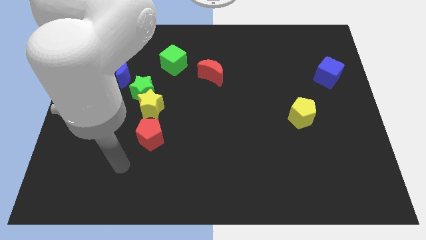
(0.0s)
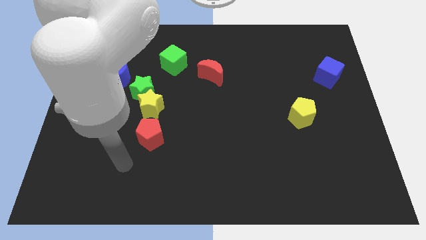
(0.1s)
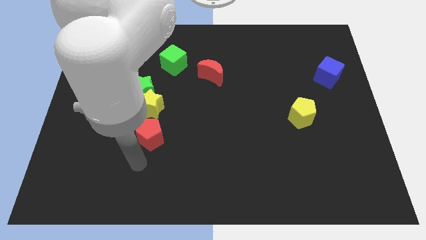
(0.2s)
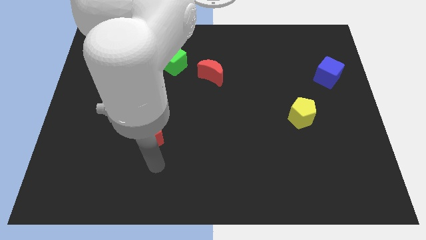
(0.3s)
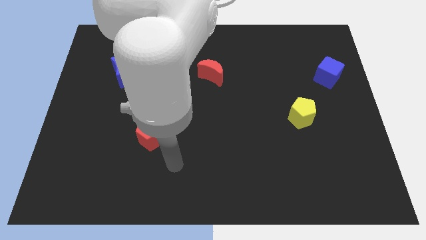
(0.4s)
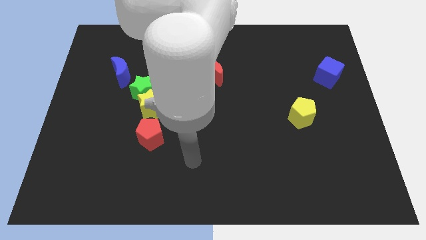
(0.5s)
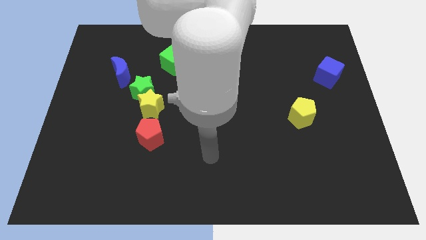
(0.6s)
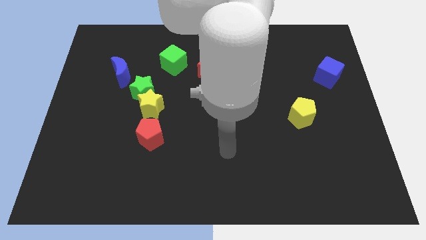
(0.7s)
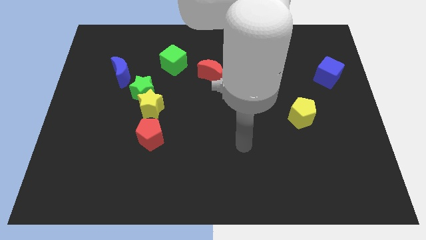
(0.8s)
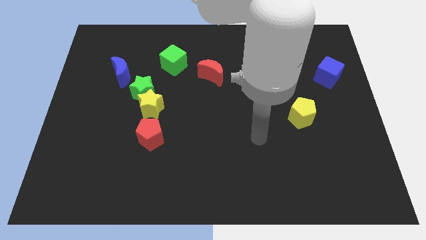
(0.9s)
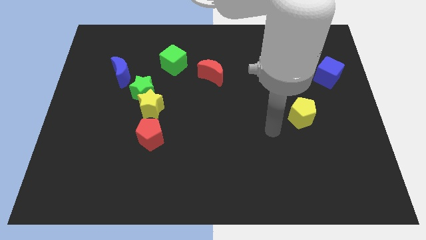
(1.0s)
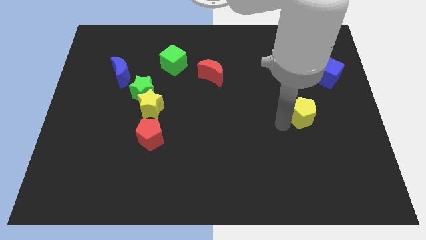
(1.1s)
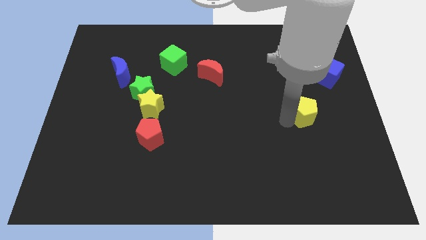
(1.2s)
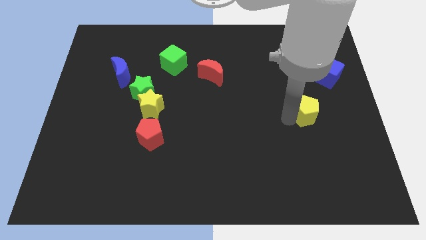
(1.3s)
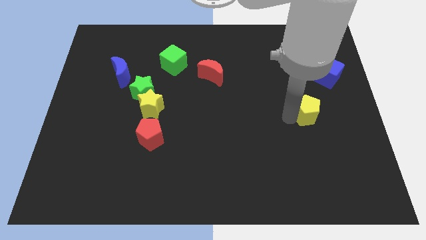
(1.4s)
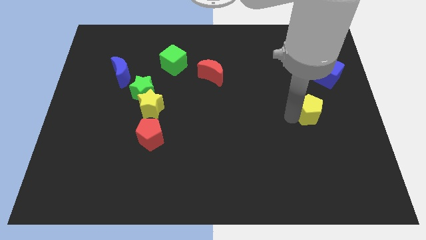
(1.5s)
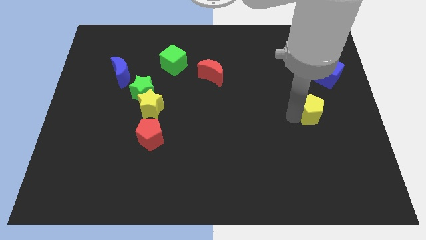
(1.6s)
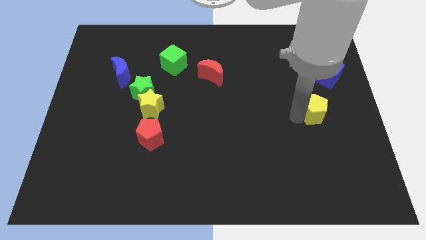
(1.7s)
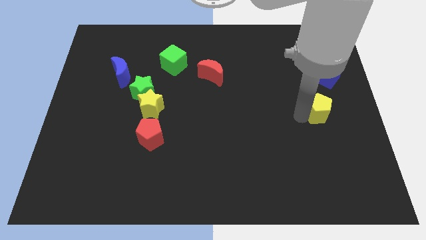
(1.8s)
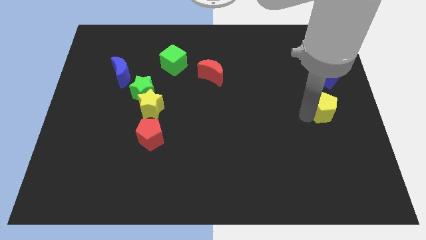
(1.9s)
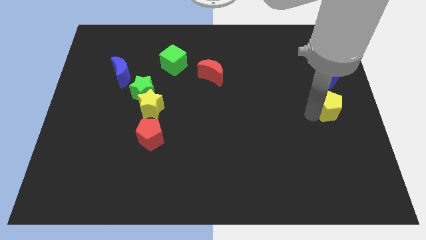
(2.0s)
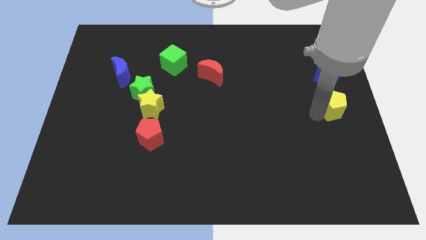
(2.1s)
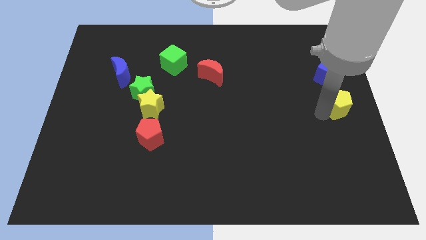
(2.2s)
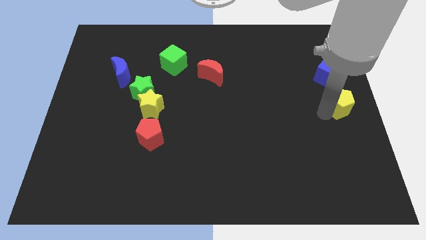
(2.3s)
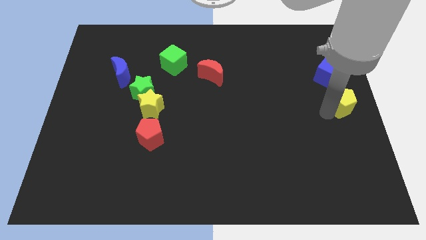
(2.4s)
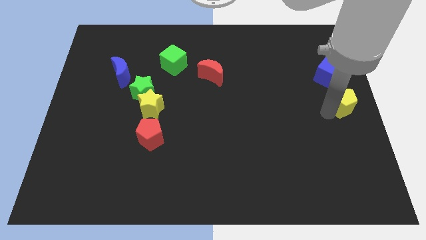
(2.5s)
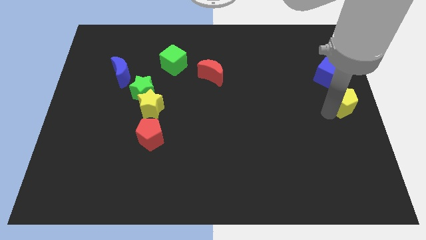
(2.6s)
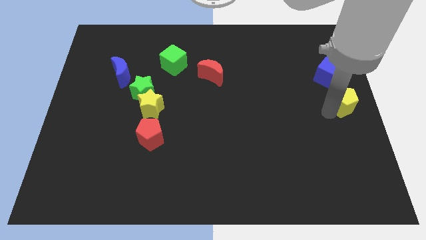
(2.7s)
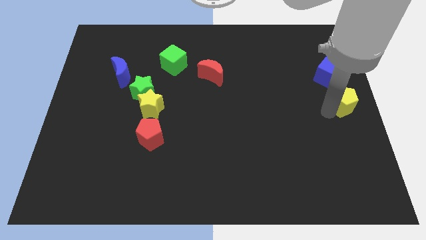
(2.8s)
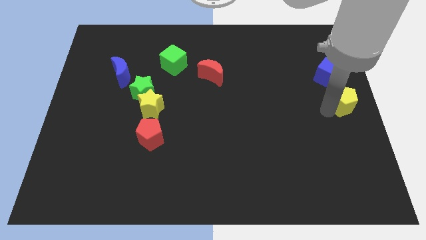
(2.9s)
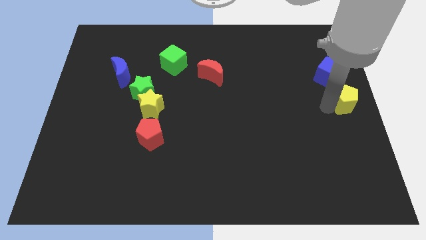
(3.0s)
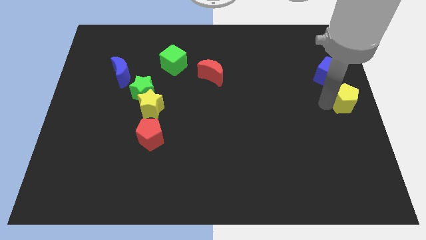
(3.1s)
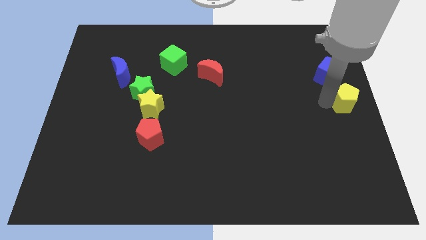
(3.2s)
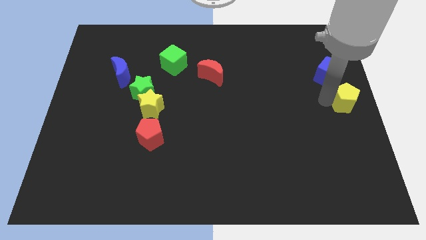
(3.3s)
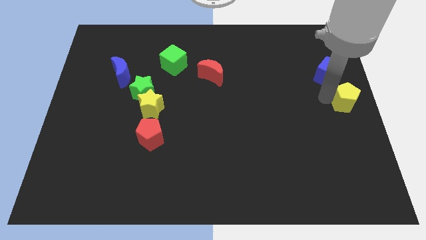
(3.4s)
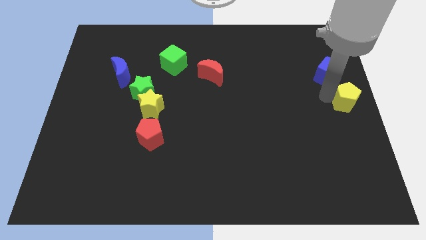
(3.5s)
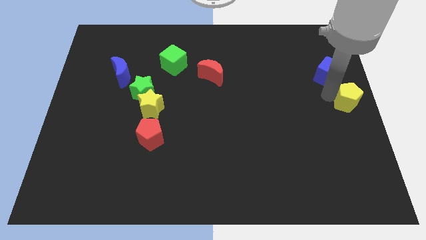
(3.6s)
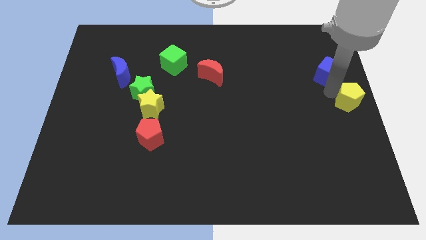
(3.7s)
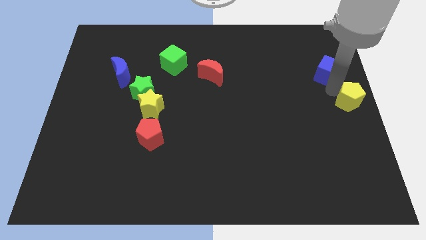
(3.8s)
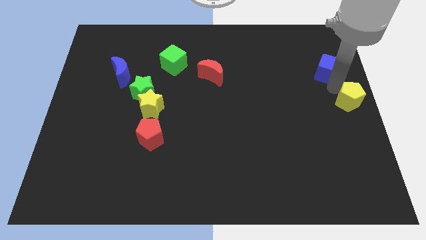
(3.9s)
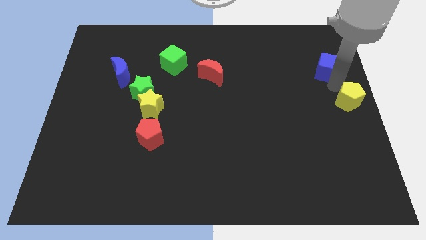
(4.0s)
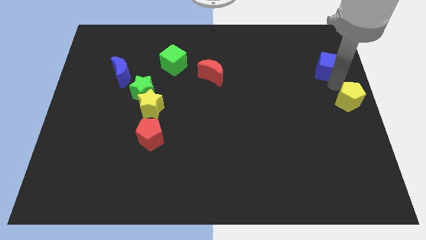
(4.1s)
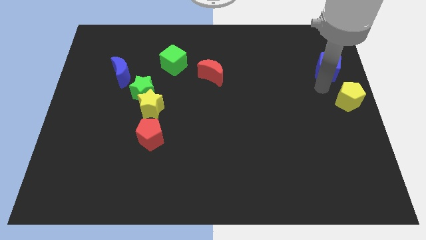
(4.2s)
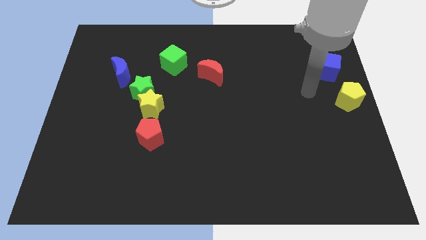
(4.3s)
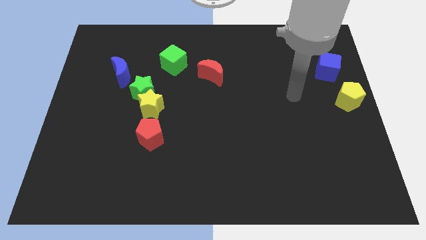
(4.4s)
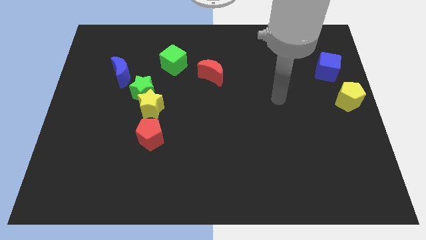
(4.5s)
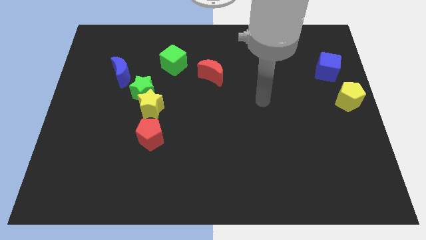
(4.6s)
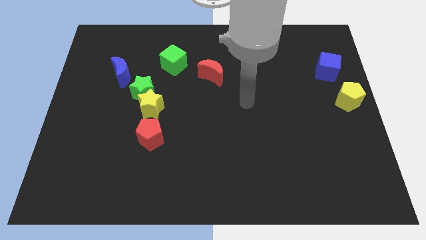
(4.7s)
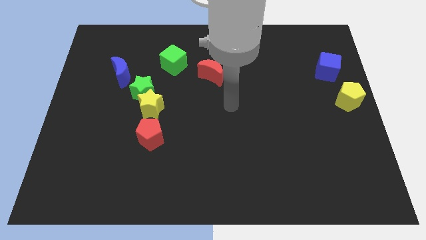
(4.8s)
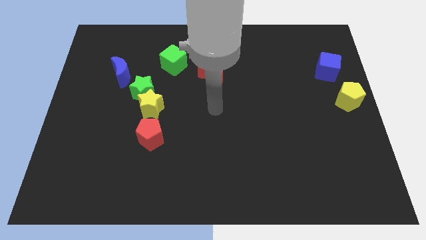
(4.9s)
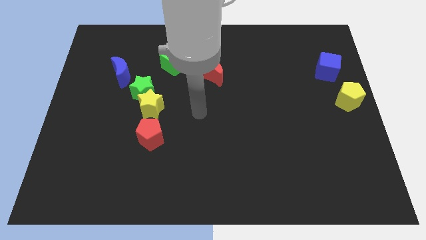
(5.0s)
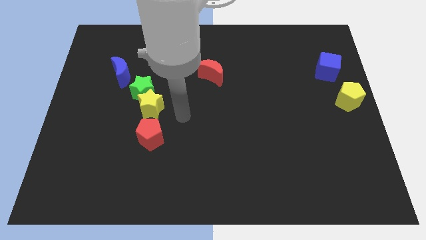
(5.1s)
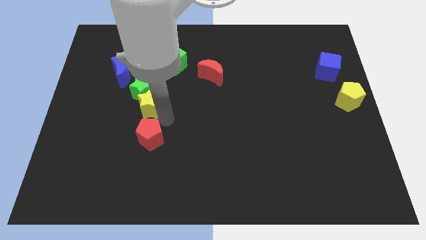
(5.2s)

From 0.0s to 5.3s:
push the yellow pentagon to the right center

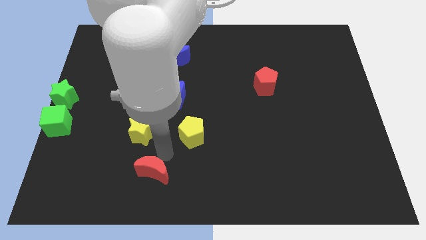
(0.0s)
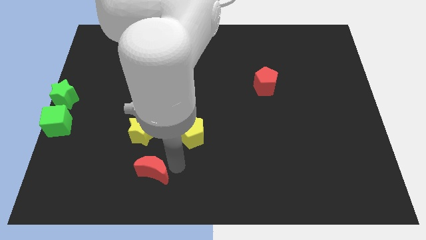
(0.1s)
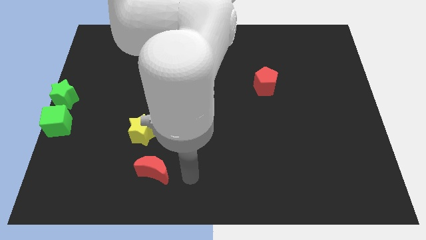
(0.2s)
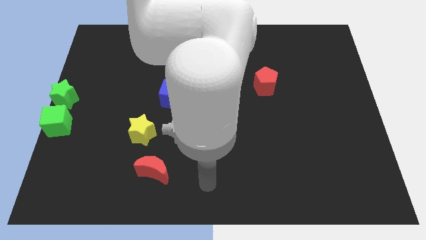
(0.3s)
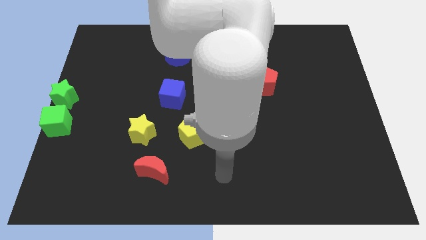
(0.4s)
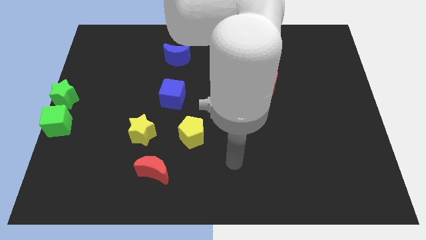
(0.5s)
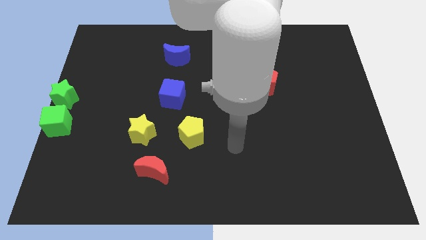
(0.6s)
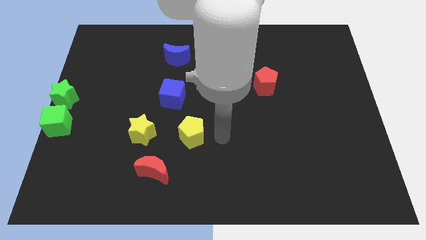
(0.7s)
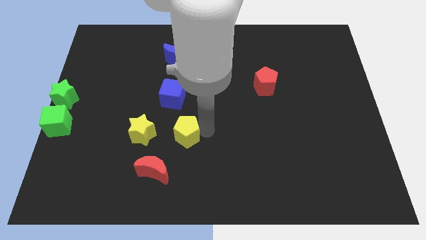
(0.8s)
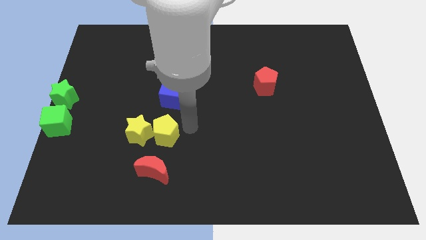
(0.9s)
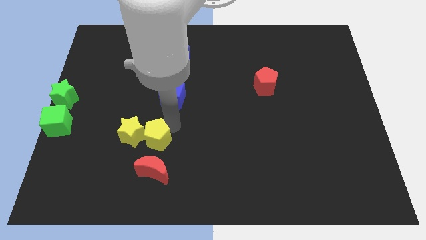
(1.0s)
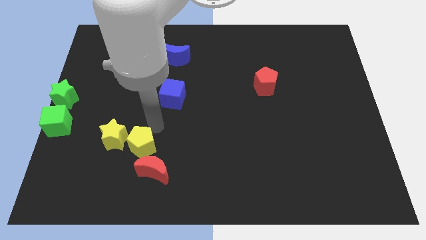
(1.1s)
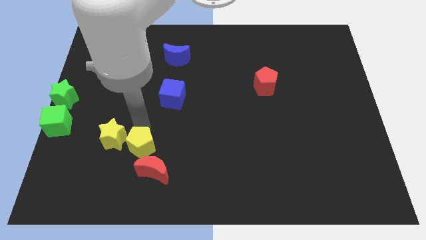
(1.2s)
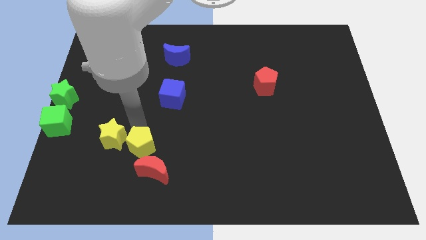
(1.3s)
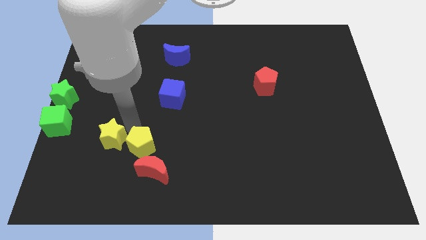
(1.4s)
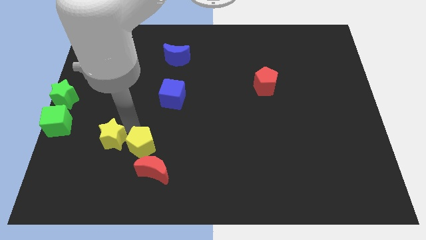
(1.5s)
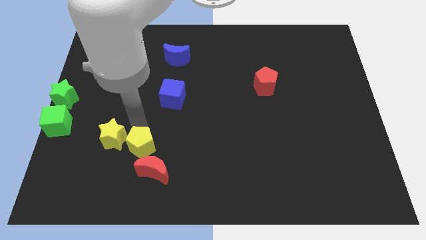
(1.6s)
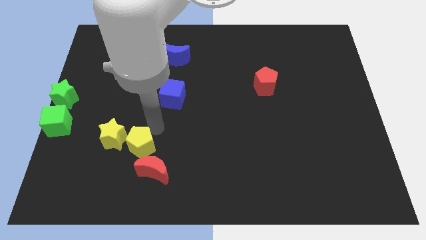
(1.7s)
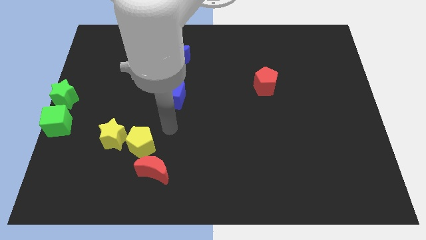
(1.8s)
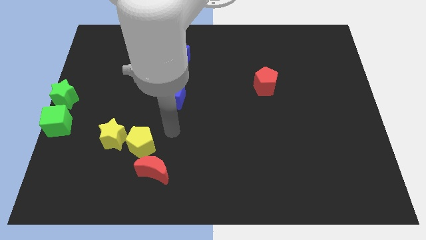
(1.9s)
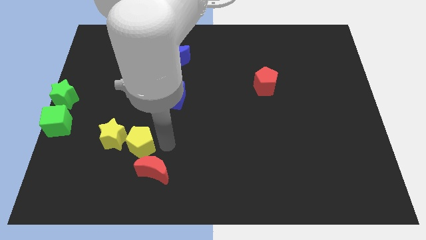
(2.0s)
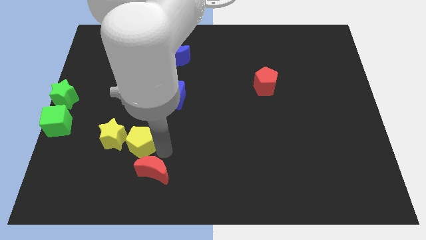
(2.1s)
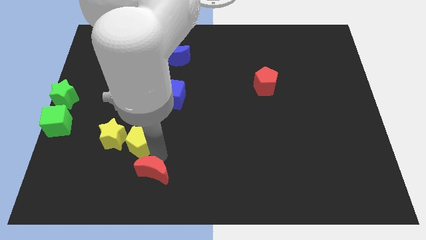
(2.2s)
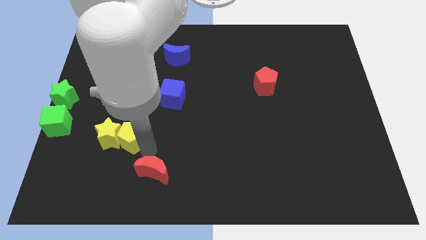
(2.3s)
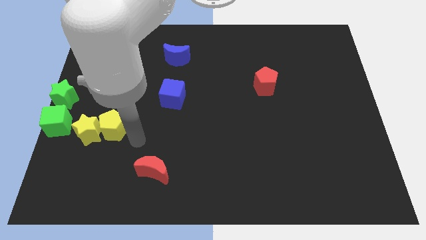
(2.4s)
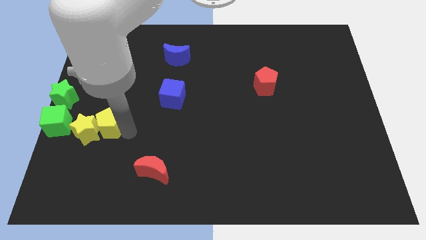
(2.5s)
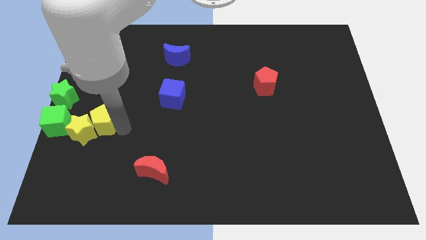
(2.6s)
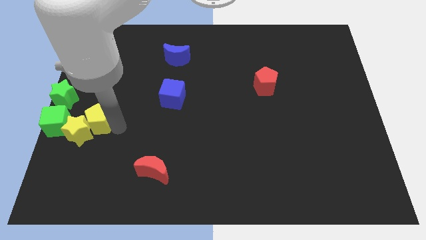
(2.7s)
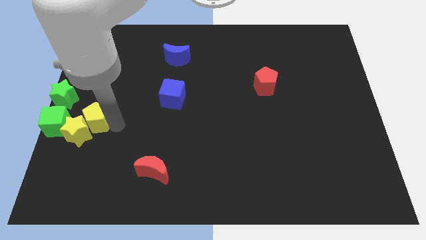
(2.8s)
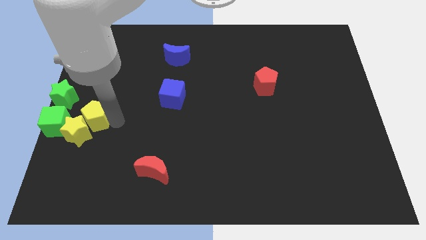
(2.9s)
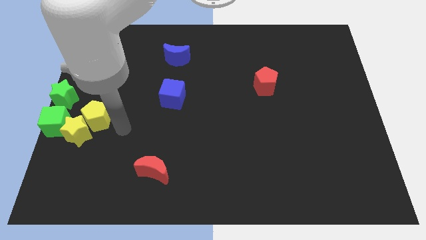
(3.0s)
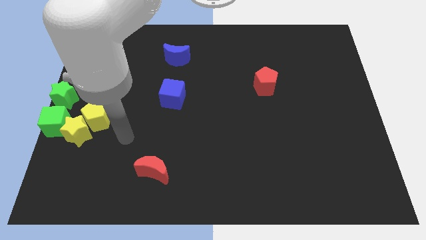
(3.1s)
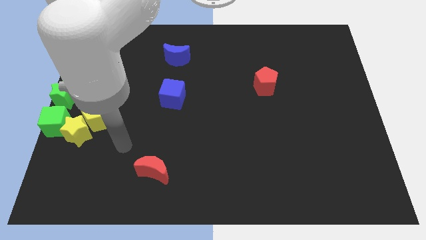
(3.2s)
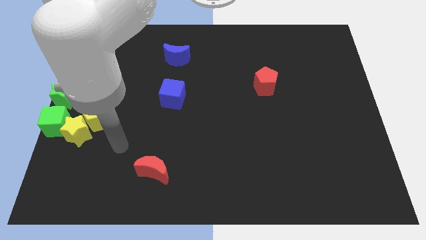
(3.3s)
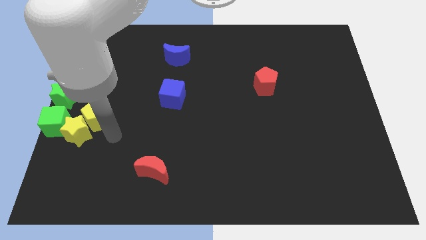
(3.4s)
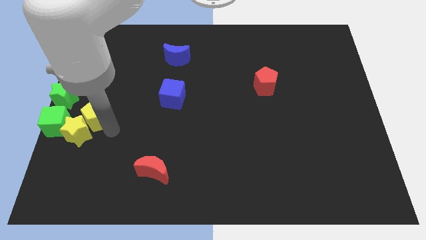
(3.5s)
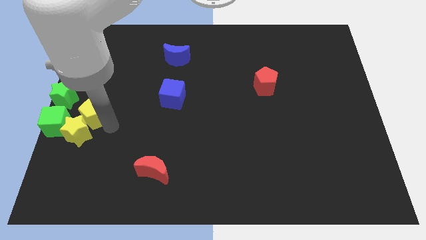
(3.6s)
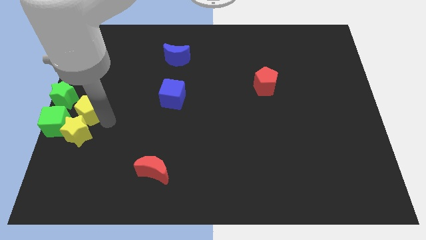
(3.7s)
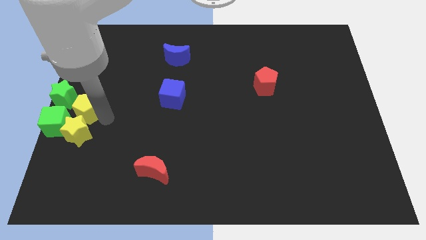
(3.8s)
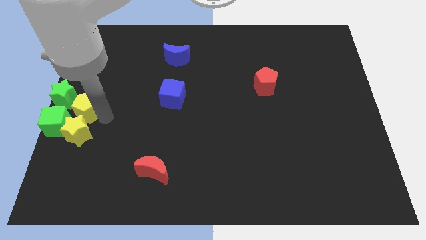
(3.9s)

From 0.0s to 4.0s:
push the yellow blocks to the right of the green blocks
